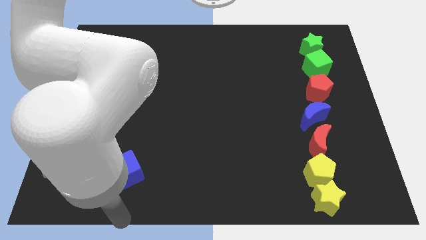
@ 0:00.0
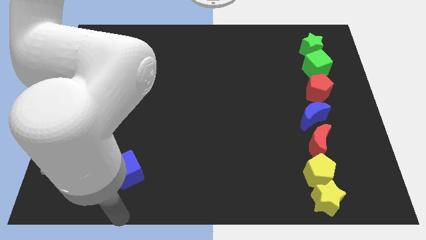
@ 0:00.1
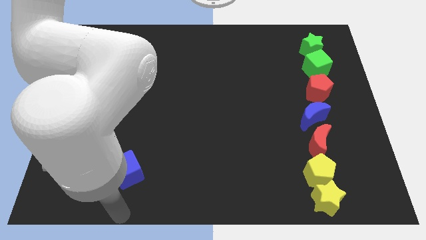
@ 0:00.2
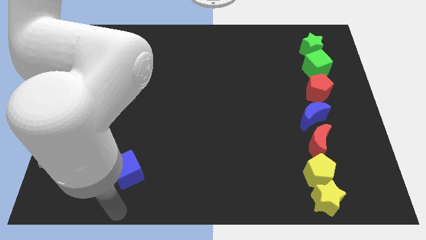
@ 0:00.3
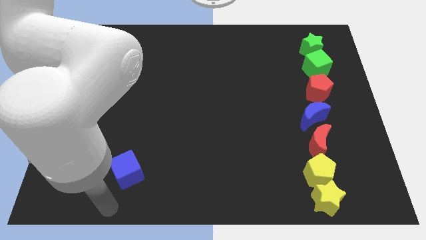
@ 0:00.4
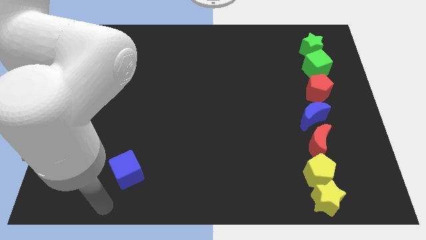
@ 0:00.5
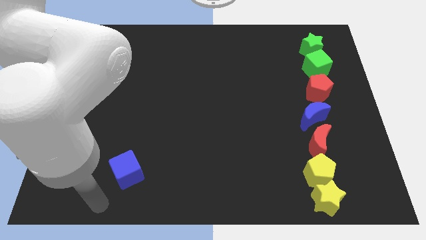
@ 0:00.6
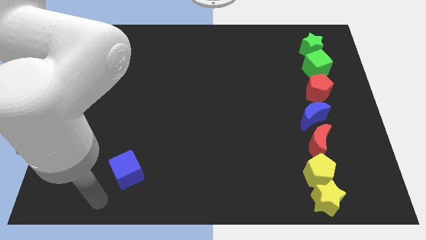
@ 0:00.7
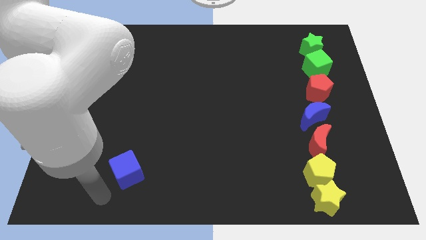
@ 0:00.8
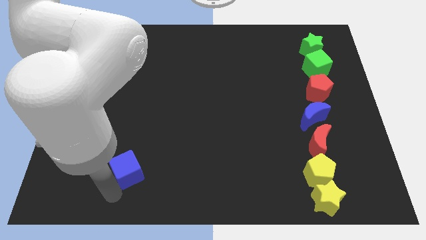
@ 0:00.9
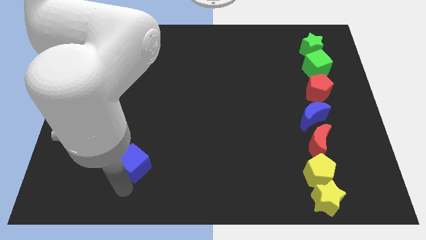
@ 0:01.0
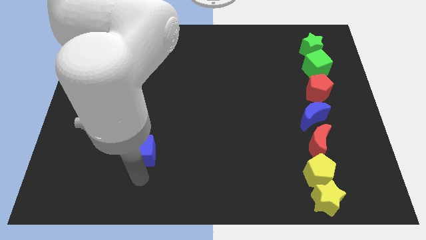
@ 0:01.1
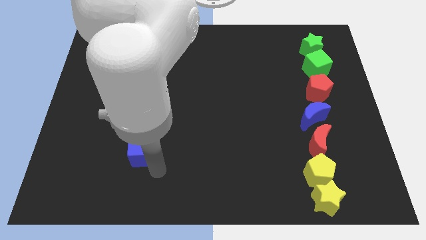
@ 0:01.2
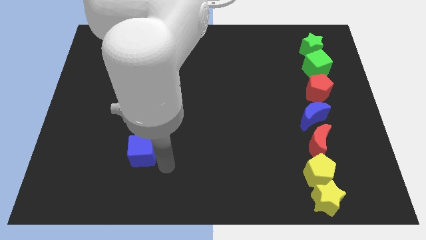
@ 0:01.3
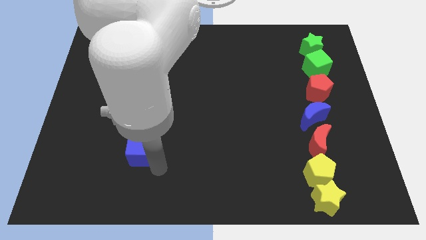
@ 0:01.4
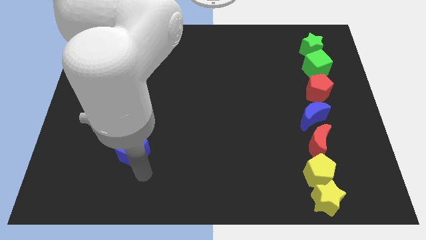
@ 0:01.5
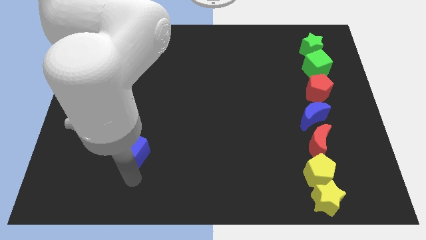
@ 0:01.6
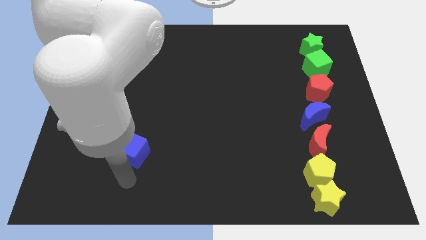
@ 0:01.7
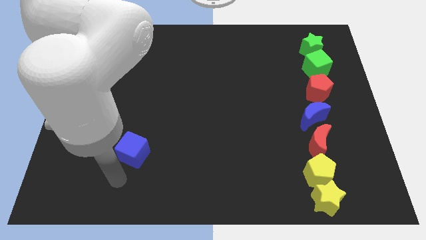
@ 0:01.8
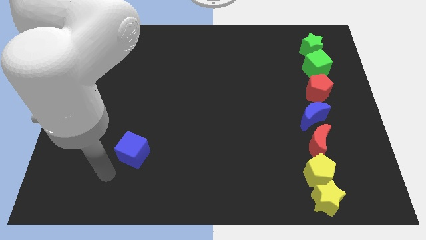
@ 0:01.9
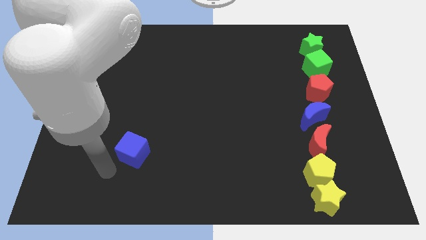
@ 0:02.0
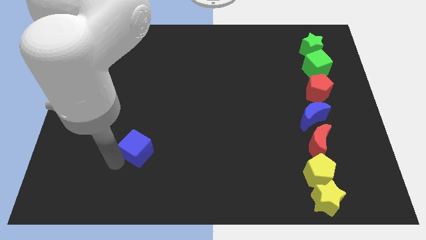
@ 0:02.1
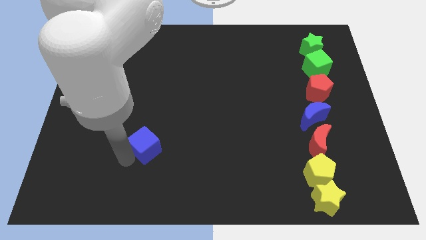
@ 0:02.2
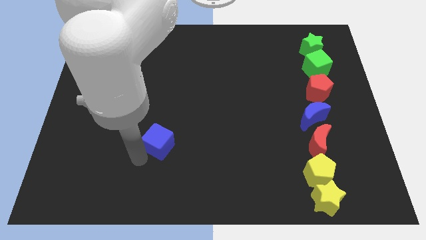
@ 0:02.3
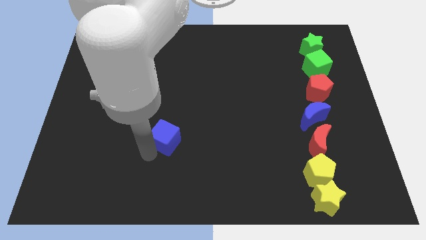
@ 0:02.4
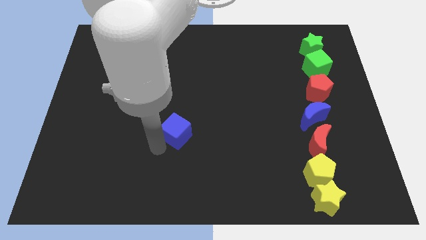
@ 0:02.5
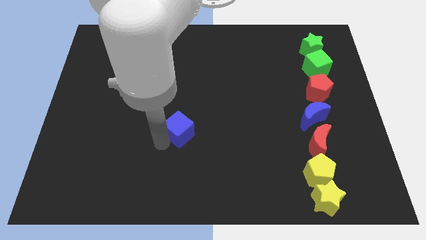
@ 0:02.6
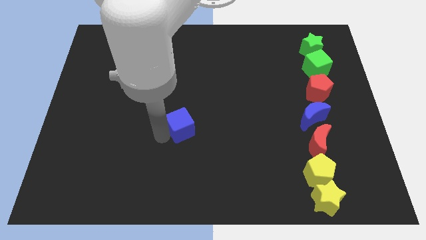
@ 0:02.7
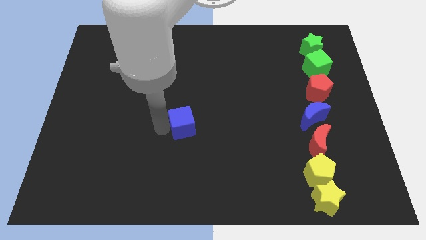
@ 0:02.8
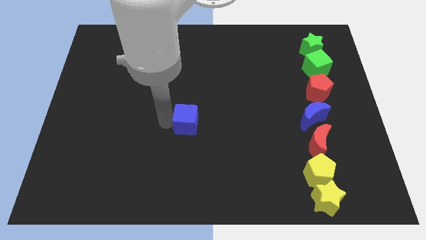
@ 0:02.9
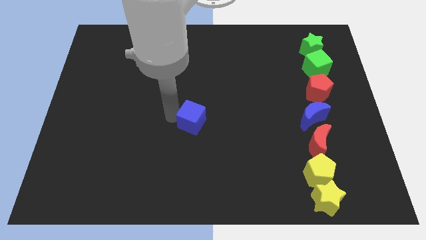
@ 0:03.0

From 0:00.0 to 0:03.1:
move blue block around

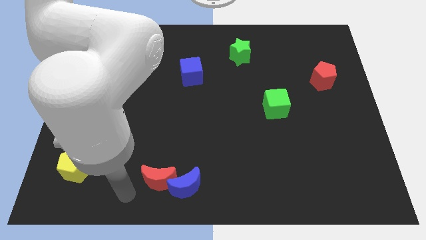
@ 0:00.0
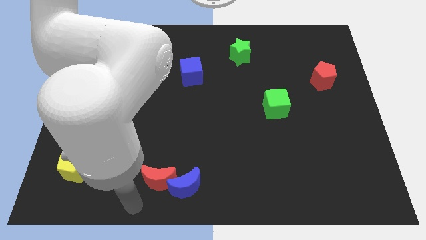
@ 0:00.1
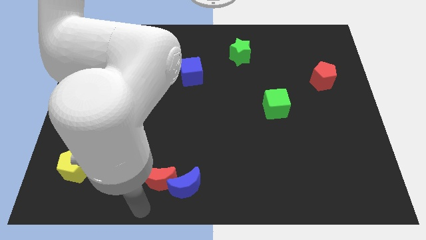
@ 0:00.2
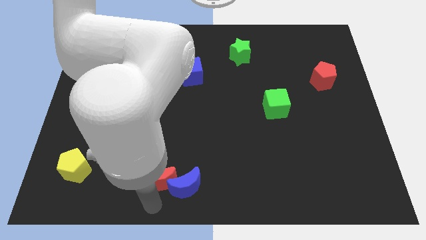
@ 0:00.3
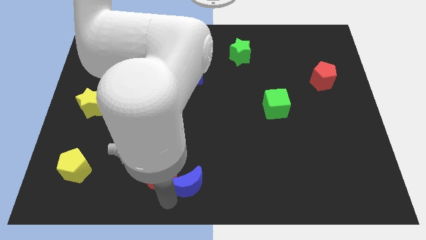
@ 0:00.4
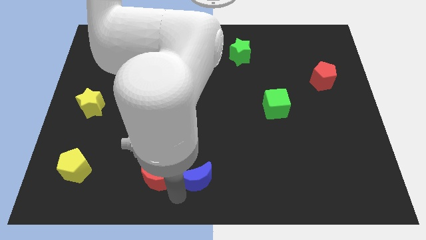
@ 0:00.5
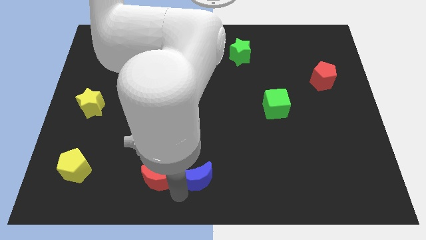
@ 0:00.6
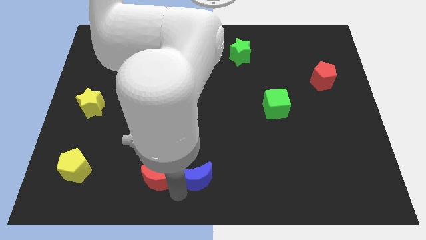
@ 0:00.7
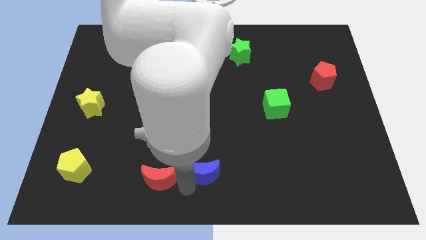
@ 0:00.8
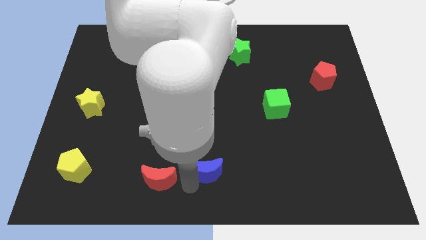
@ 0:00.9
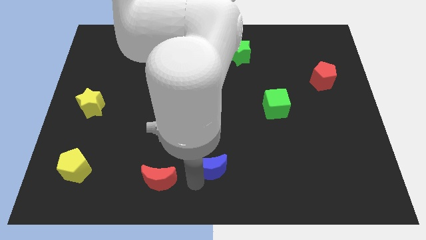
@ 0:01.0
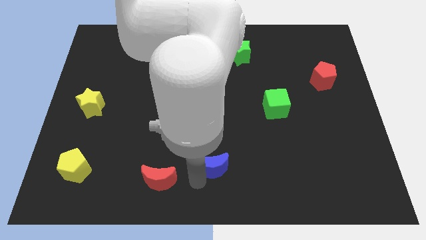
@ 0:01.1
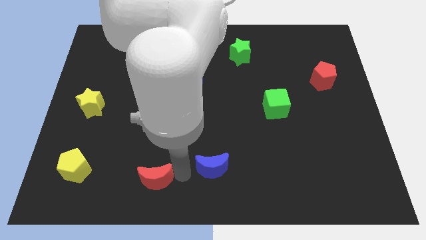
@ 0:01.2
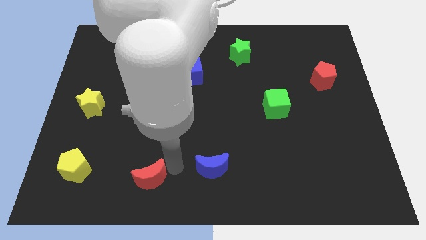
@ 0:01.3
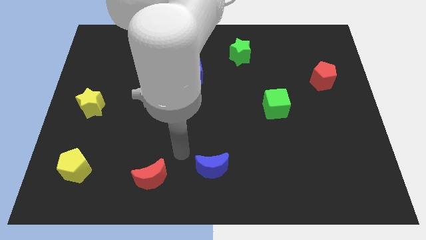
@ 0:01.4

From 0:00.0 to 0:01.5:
move away the blue crescent from the red crescent

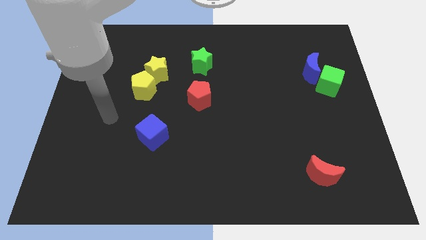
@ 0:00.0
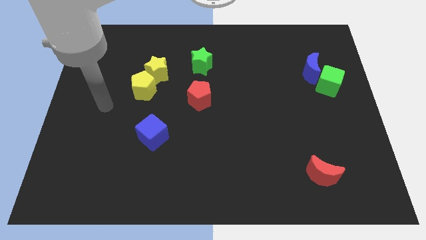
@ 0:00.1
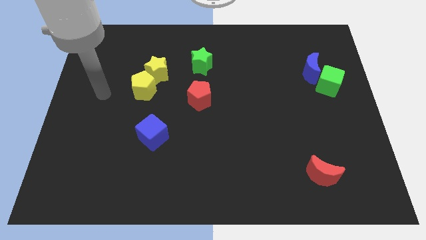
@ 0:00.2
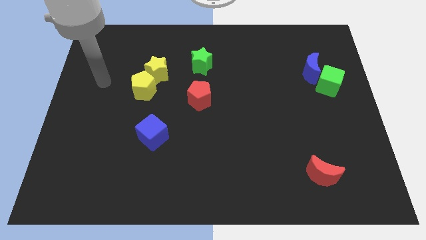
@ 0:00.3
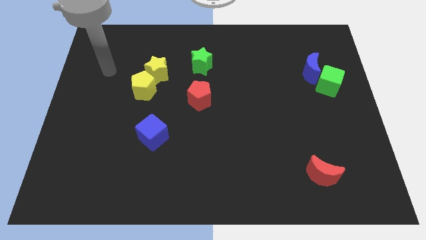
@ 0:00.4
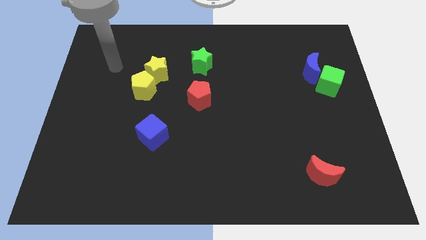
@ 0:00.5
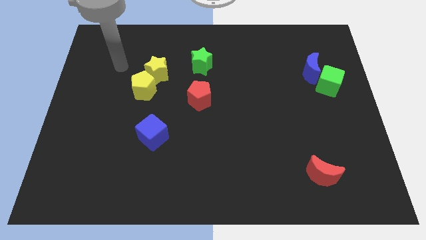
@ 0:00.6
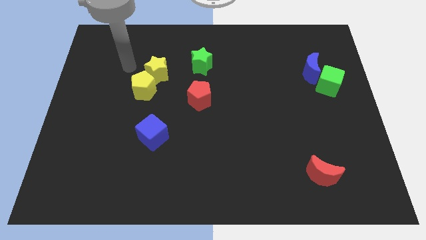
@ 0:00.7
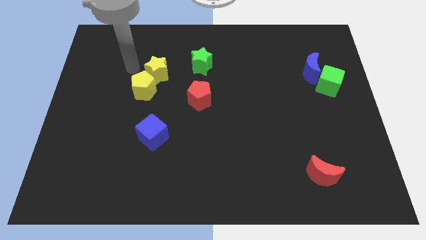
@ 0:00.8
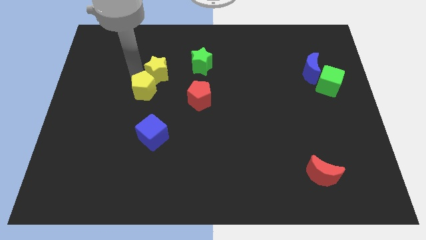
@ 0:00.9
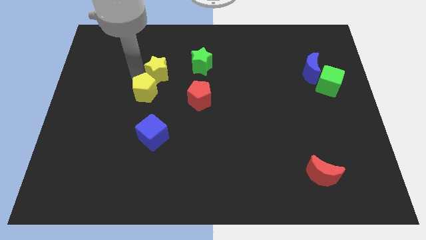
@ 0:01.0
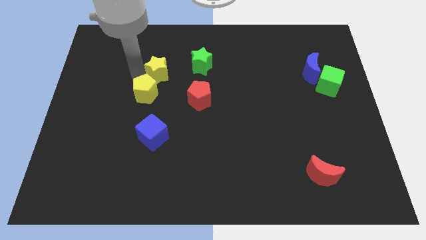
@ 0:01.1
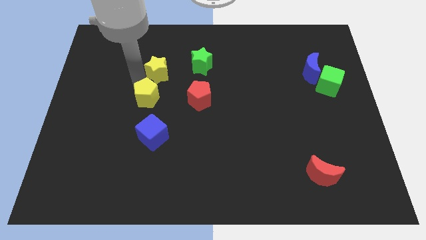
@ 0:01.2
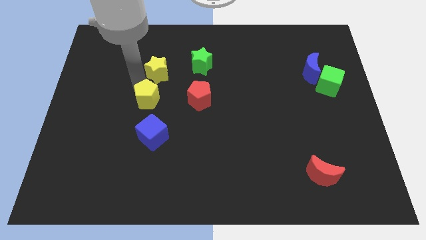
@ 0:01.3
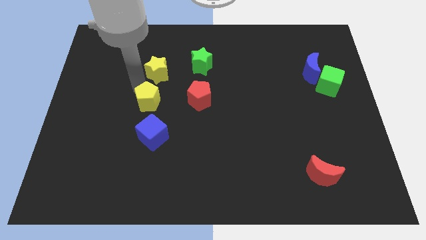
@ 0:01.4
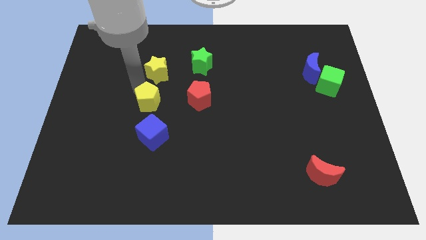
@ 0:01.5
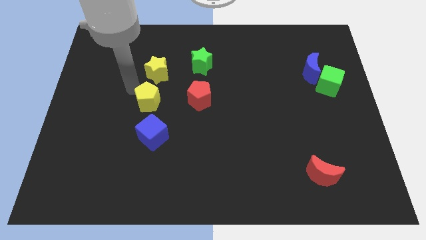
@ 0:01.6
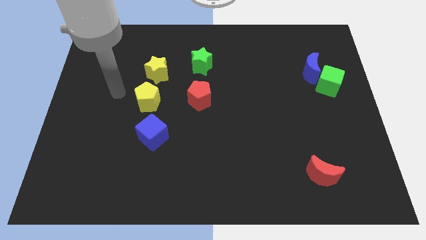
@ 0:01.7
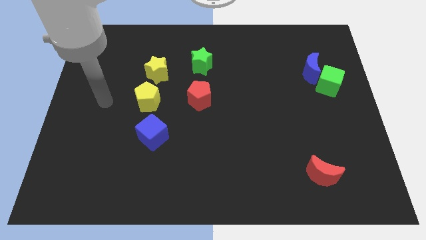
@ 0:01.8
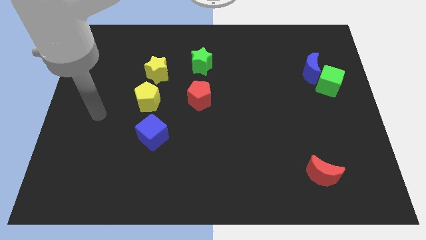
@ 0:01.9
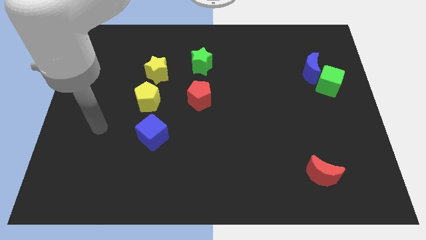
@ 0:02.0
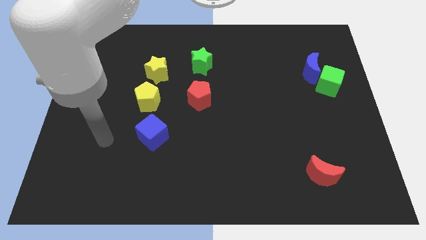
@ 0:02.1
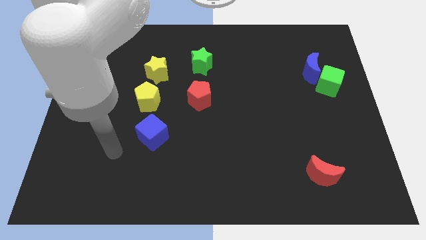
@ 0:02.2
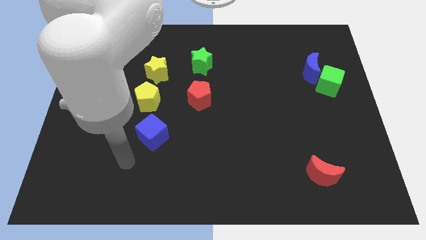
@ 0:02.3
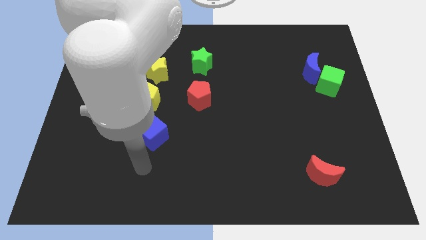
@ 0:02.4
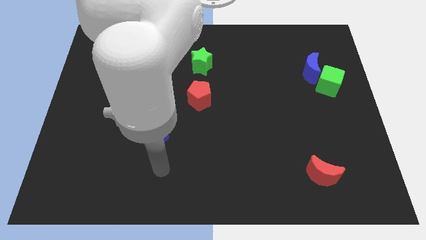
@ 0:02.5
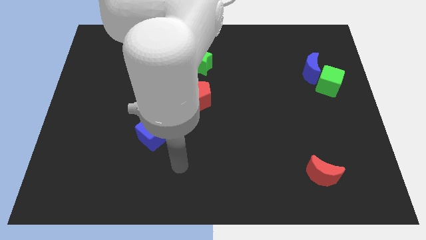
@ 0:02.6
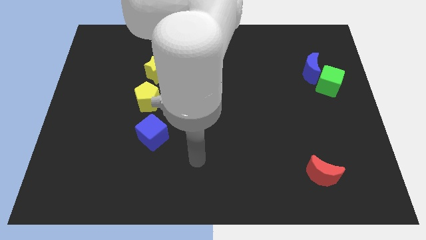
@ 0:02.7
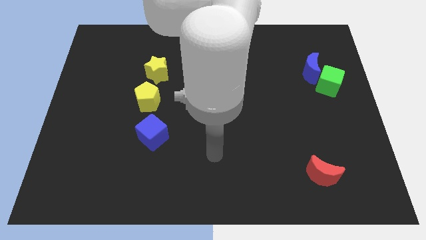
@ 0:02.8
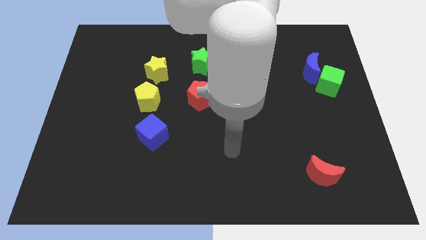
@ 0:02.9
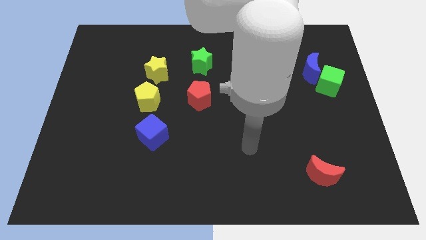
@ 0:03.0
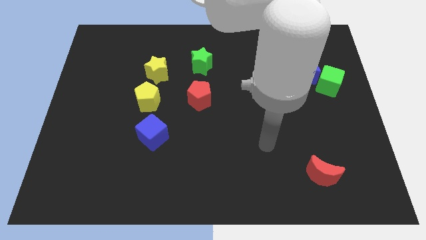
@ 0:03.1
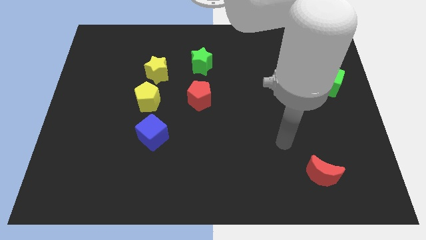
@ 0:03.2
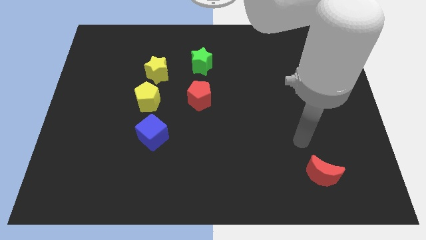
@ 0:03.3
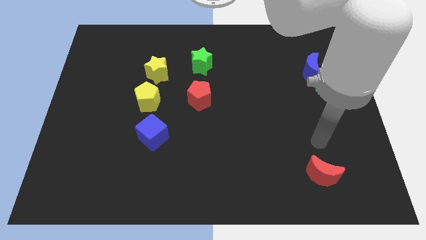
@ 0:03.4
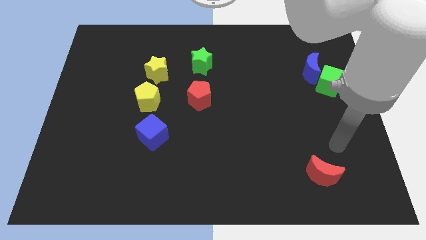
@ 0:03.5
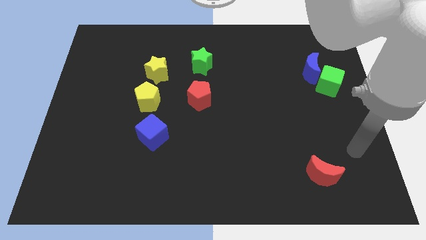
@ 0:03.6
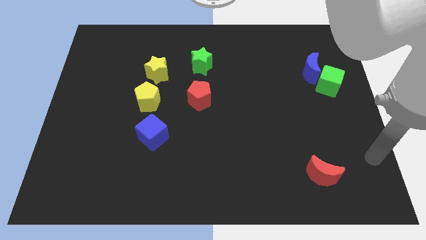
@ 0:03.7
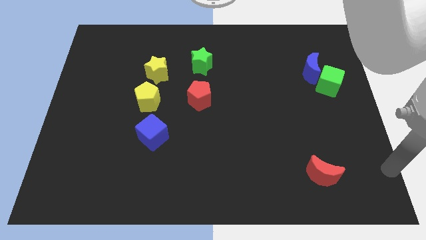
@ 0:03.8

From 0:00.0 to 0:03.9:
separate the yellow blocks from each other

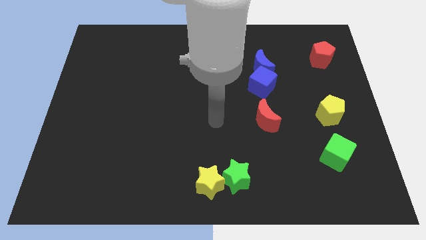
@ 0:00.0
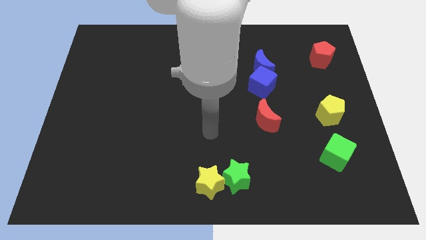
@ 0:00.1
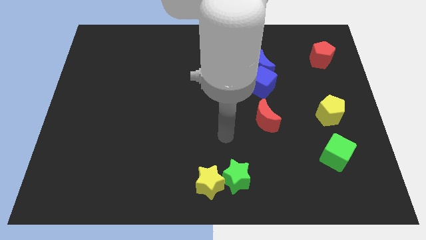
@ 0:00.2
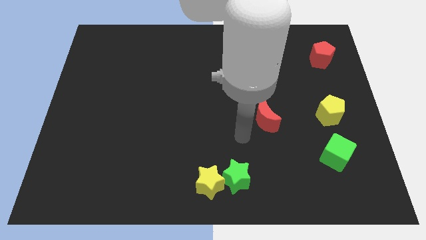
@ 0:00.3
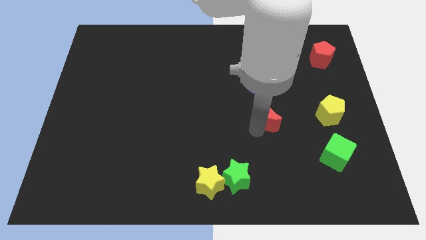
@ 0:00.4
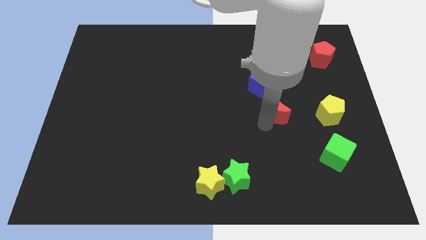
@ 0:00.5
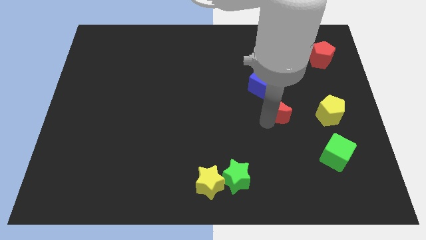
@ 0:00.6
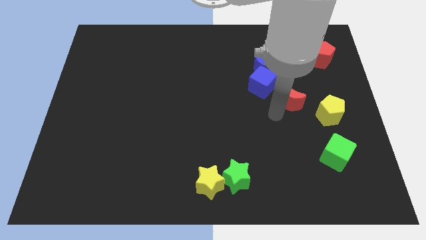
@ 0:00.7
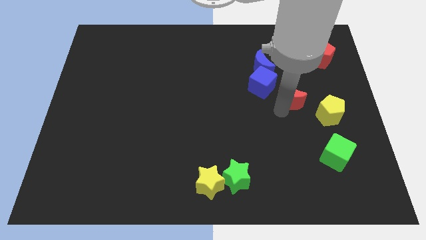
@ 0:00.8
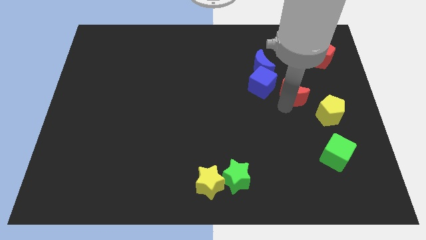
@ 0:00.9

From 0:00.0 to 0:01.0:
place the red crescent between the blue cube and yellow pentagon
